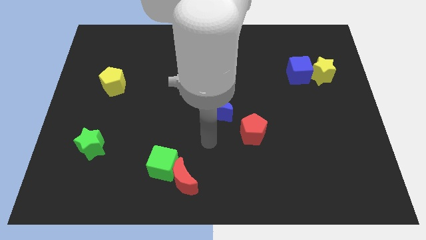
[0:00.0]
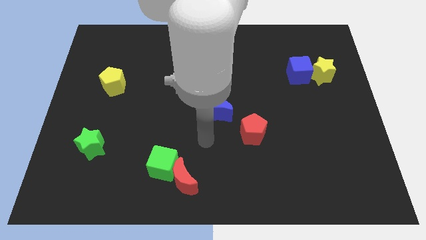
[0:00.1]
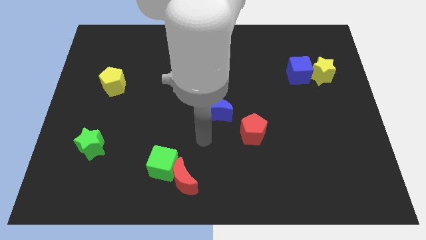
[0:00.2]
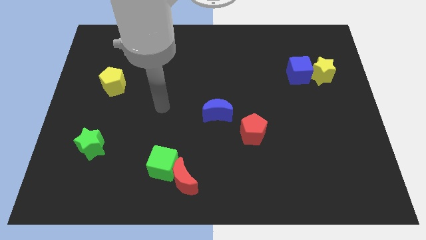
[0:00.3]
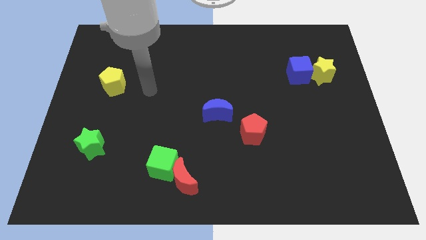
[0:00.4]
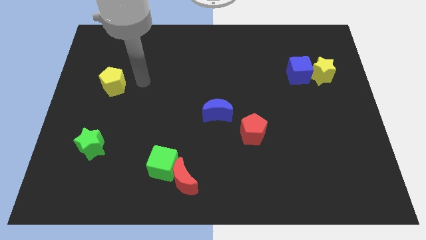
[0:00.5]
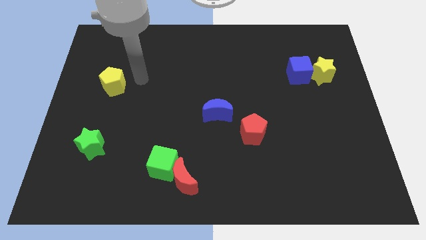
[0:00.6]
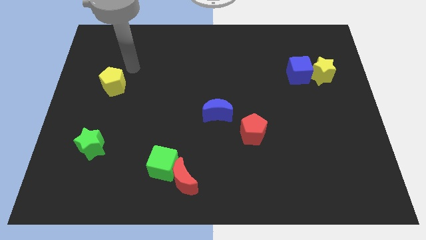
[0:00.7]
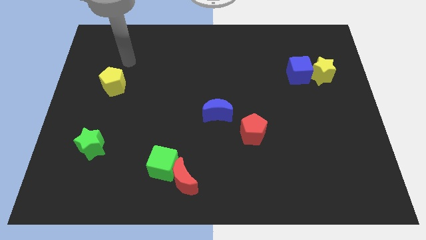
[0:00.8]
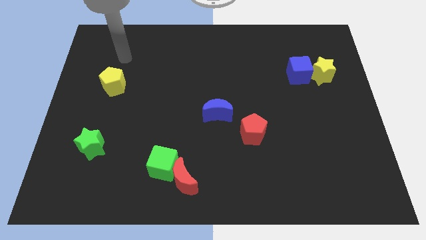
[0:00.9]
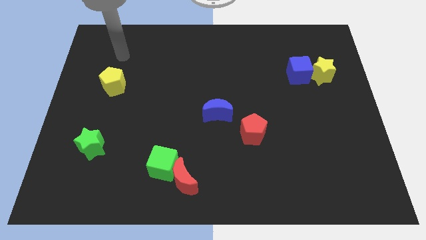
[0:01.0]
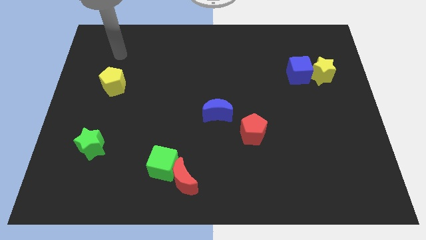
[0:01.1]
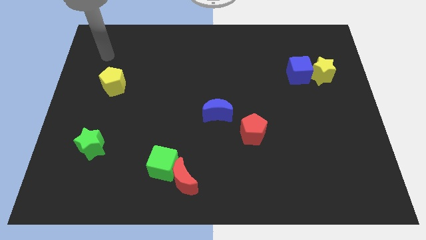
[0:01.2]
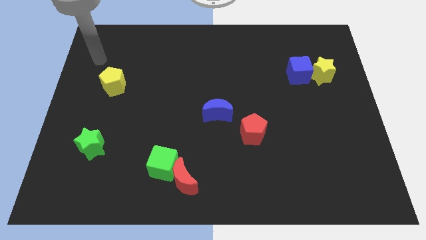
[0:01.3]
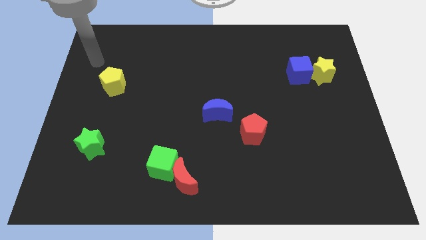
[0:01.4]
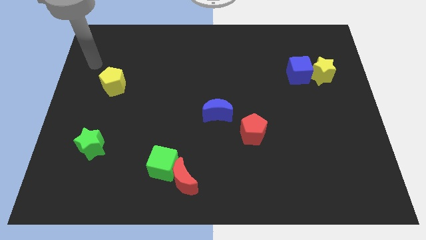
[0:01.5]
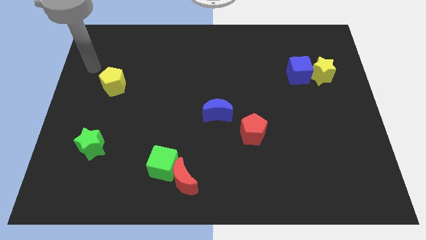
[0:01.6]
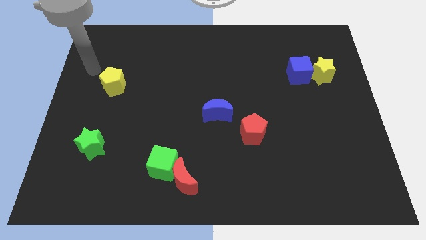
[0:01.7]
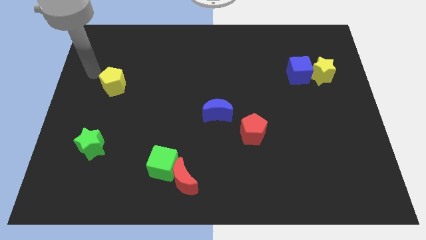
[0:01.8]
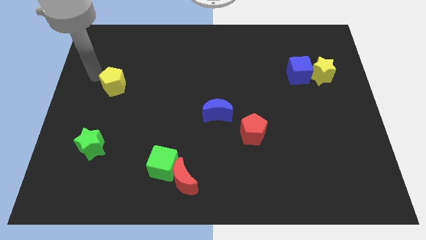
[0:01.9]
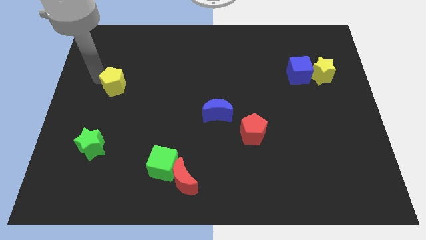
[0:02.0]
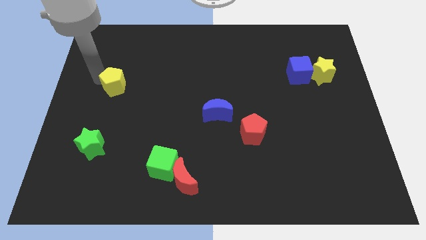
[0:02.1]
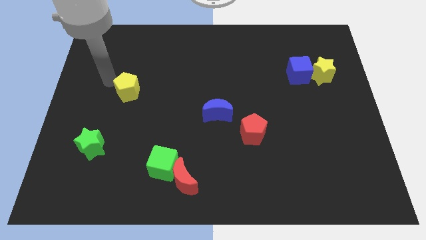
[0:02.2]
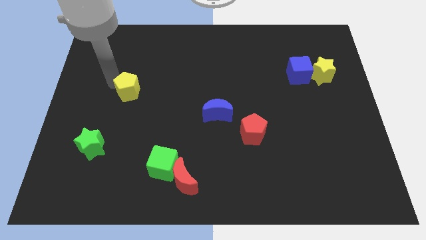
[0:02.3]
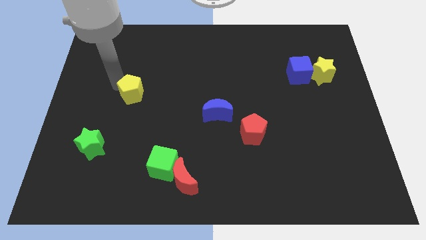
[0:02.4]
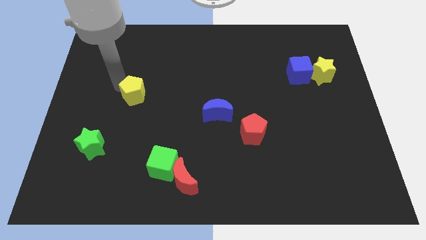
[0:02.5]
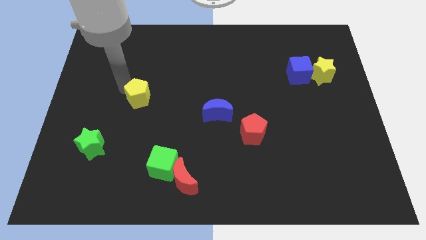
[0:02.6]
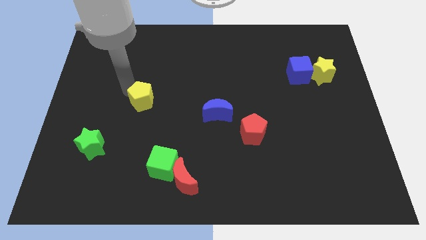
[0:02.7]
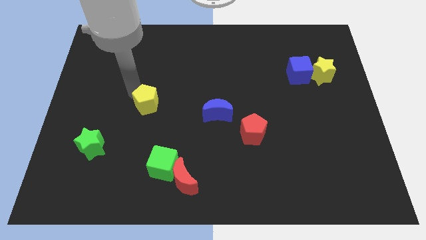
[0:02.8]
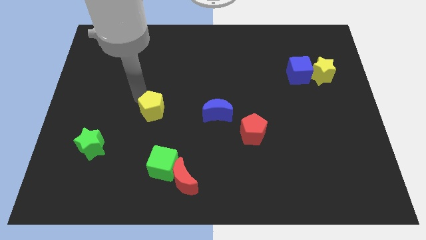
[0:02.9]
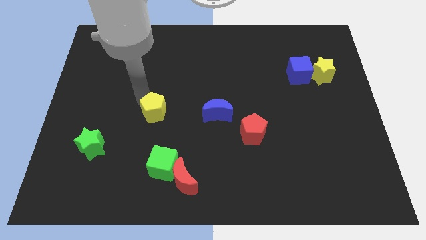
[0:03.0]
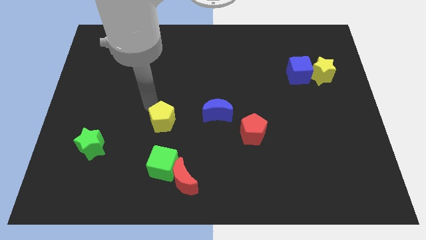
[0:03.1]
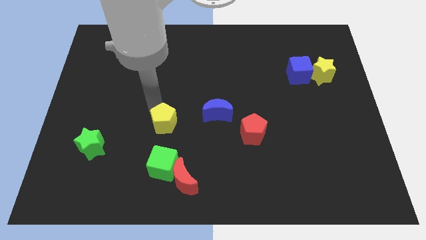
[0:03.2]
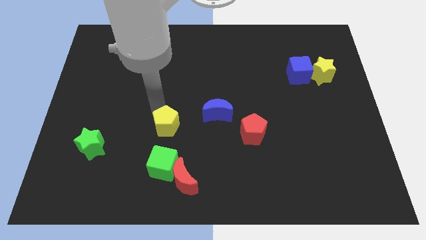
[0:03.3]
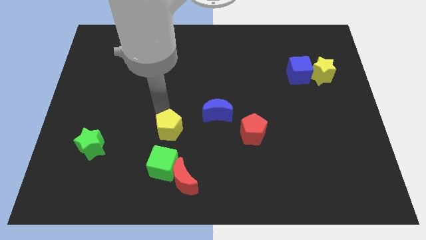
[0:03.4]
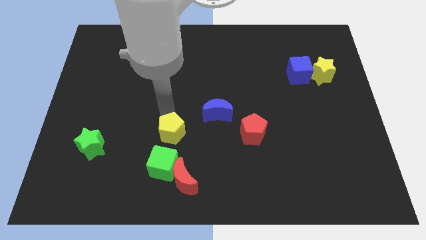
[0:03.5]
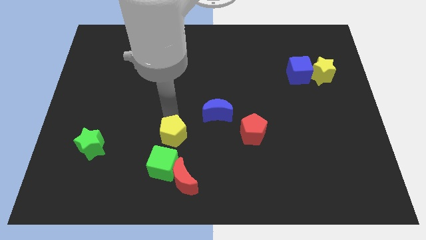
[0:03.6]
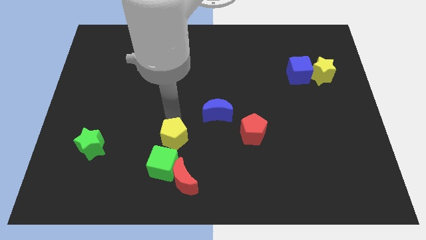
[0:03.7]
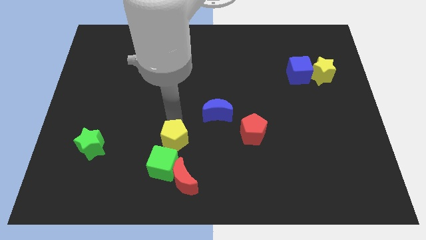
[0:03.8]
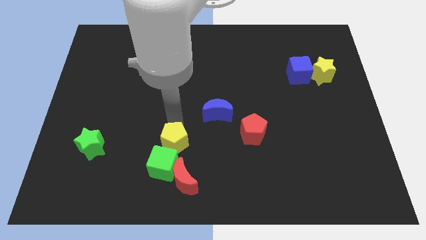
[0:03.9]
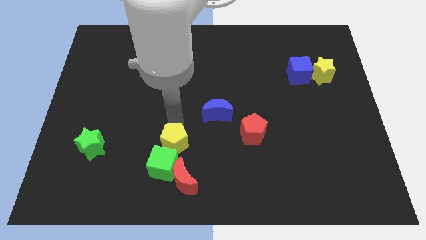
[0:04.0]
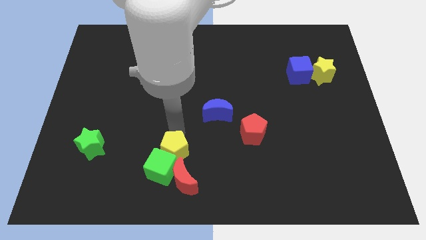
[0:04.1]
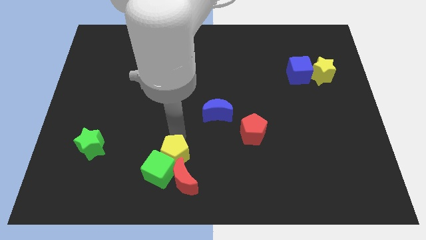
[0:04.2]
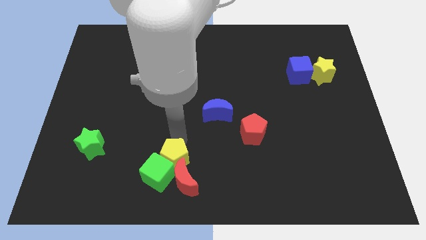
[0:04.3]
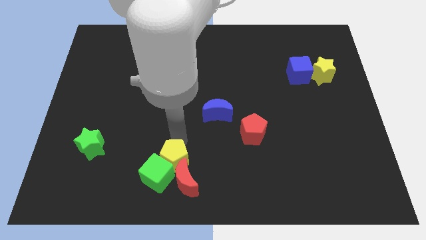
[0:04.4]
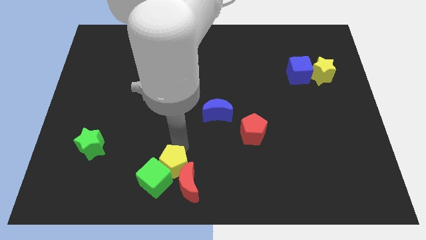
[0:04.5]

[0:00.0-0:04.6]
put the yellow pentagon close to the red moon

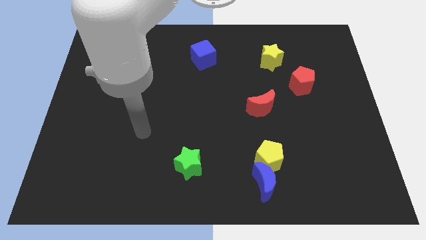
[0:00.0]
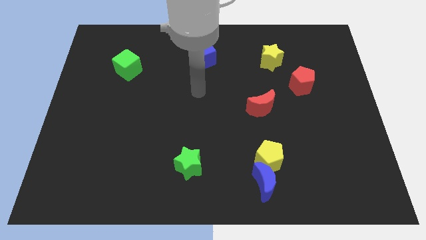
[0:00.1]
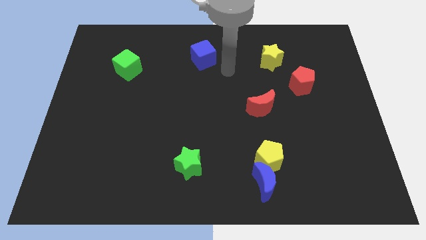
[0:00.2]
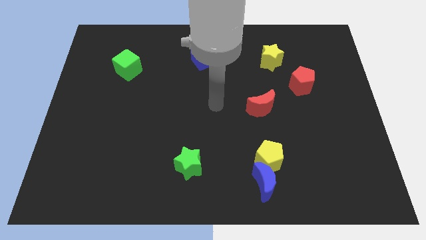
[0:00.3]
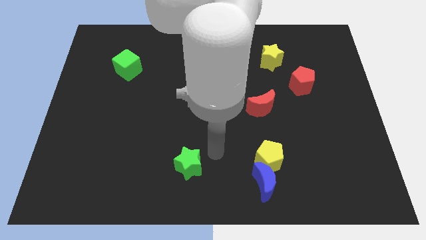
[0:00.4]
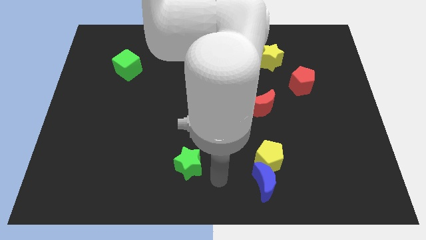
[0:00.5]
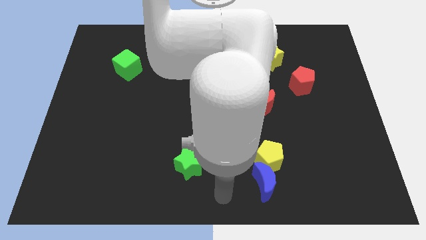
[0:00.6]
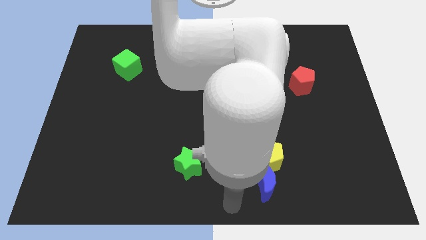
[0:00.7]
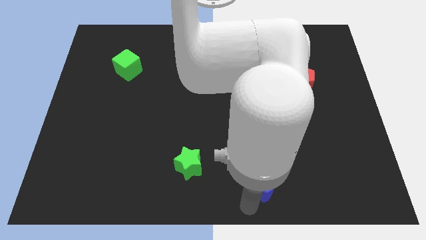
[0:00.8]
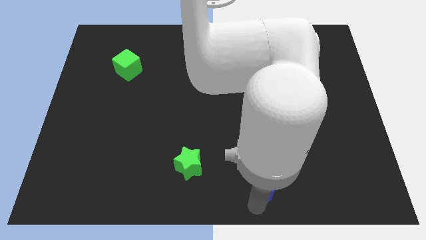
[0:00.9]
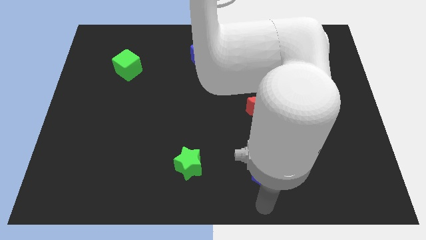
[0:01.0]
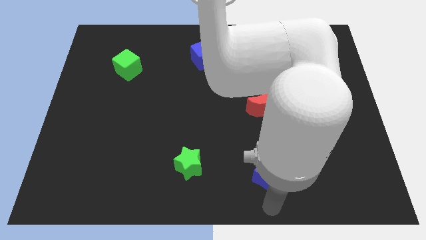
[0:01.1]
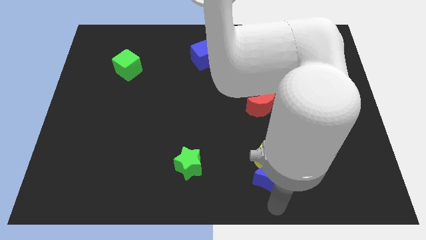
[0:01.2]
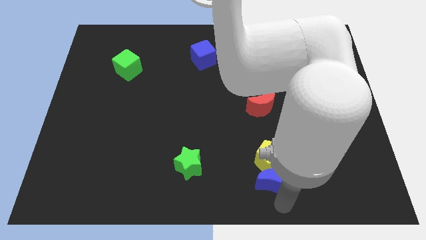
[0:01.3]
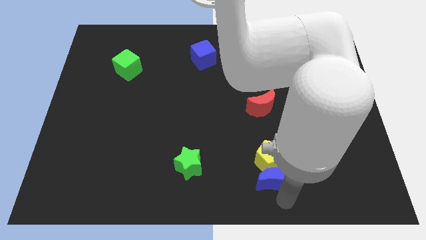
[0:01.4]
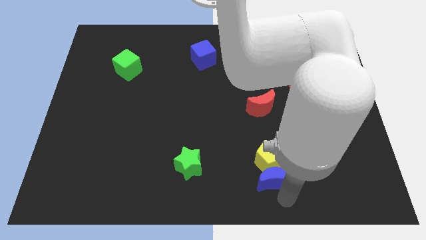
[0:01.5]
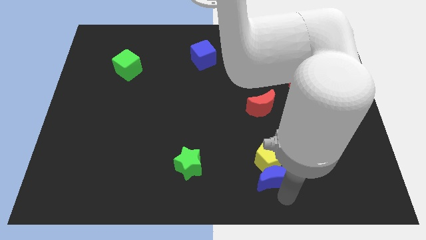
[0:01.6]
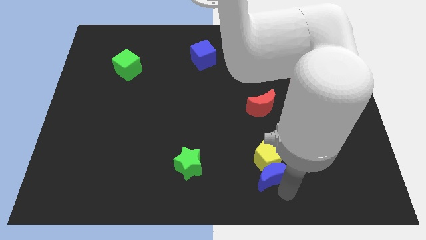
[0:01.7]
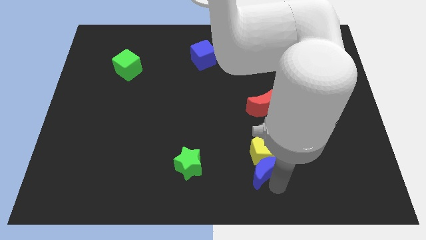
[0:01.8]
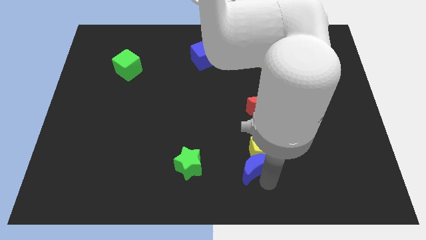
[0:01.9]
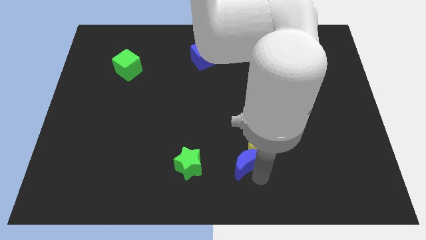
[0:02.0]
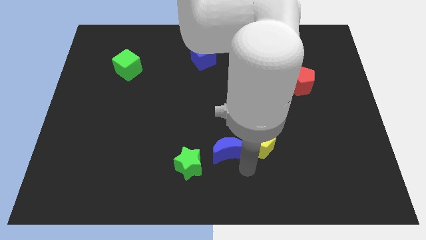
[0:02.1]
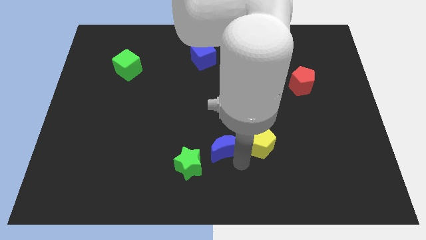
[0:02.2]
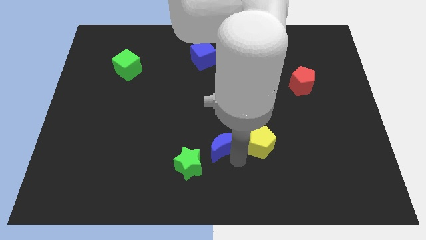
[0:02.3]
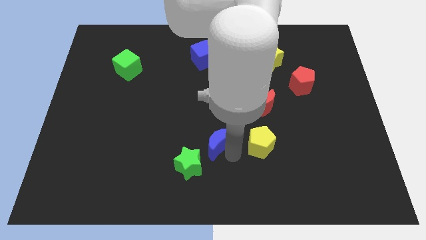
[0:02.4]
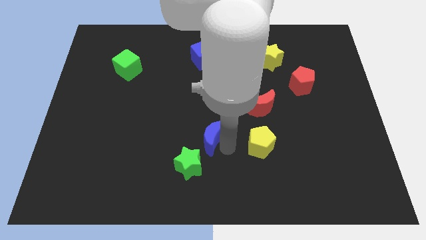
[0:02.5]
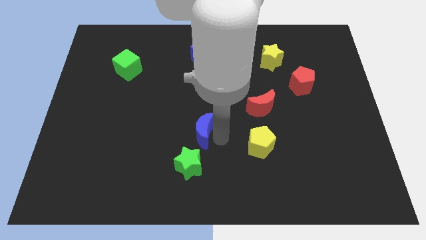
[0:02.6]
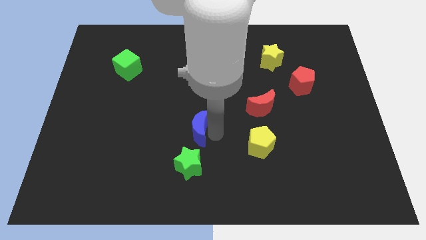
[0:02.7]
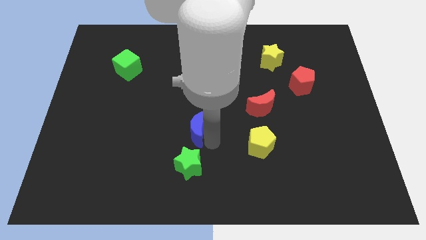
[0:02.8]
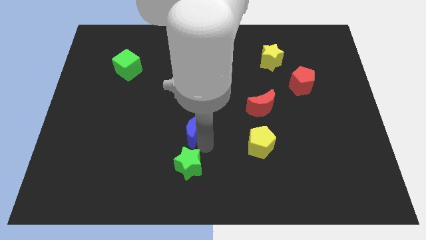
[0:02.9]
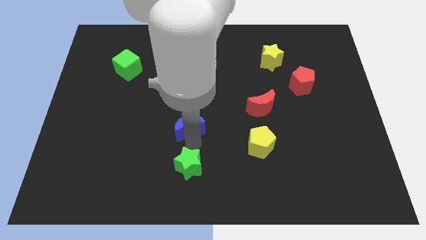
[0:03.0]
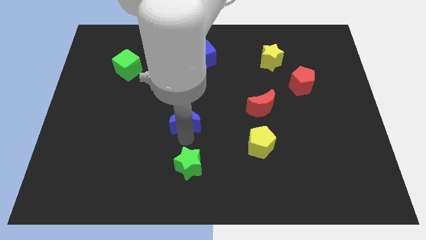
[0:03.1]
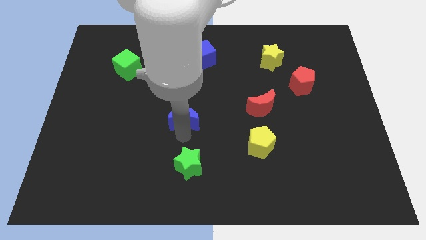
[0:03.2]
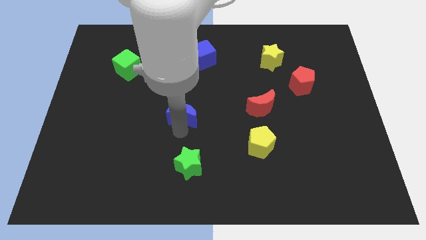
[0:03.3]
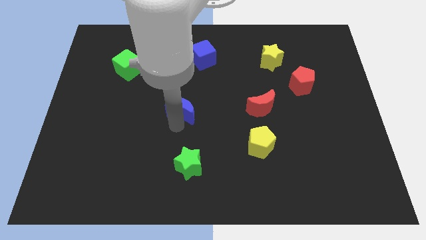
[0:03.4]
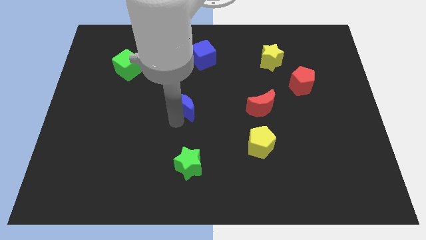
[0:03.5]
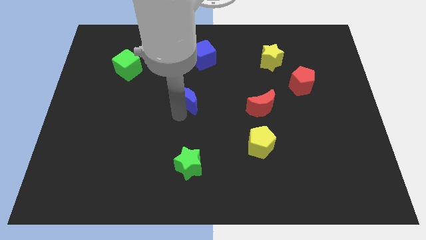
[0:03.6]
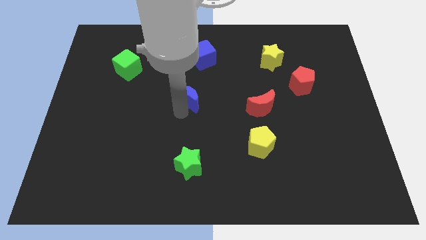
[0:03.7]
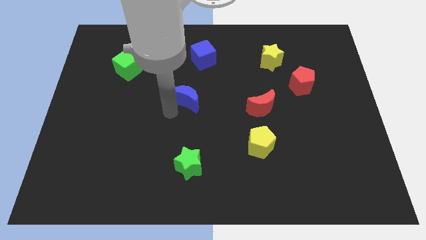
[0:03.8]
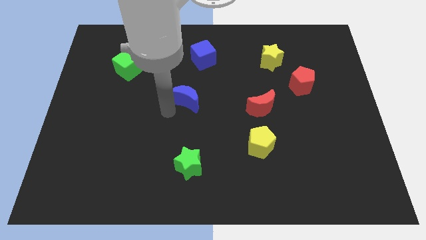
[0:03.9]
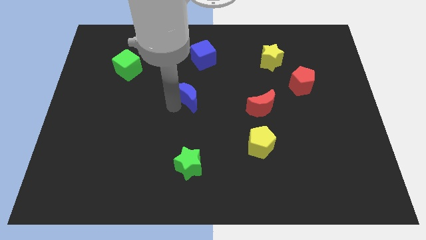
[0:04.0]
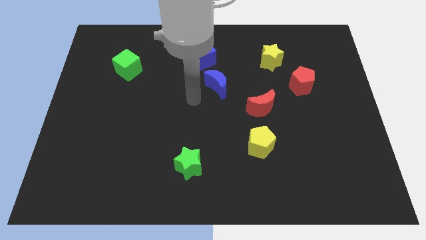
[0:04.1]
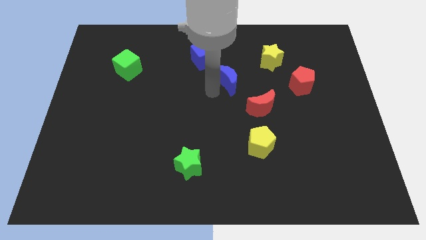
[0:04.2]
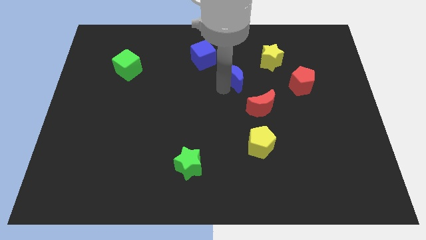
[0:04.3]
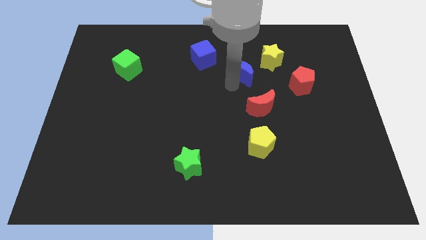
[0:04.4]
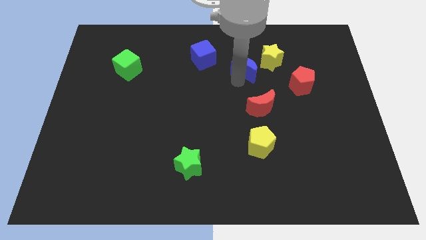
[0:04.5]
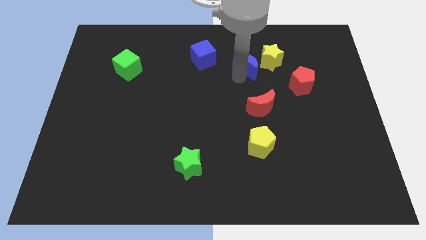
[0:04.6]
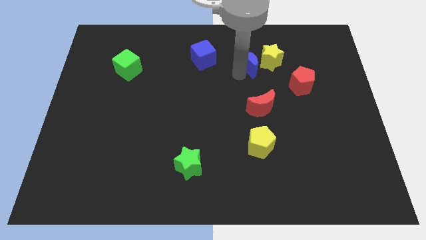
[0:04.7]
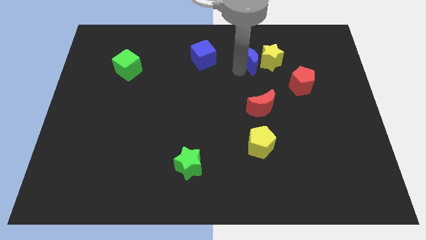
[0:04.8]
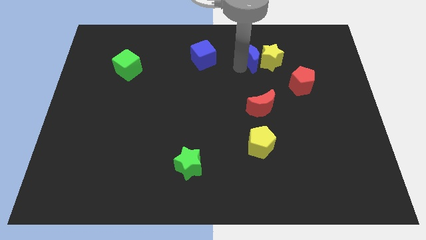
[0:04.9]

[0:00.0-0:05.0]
move the blue moon close to the yellow star
